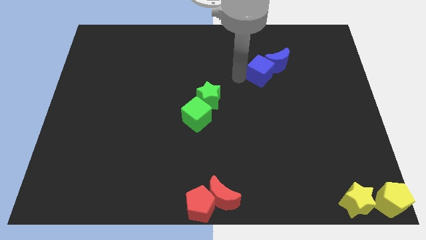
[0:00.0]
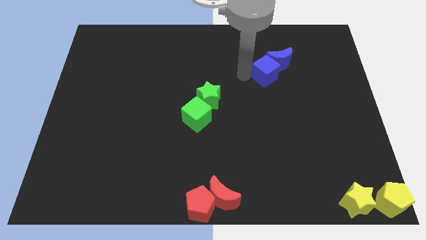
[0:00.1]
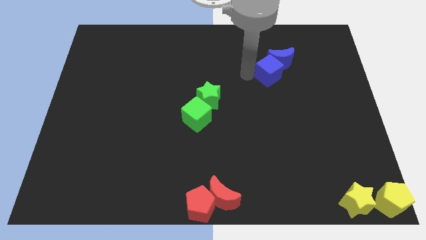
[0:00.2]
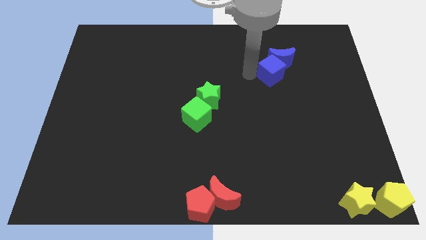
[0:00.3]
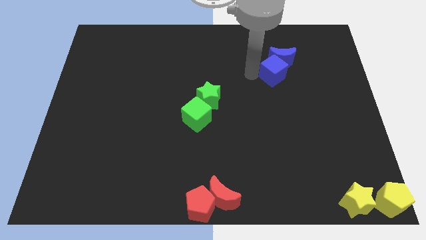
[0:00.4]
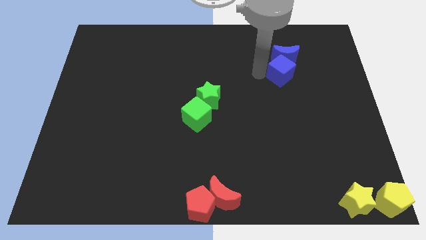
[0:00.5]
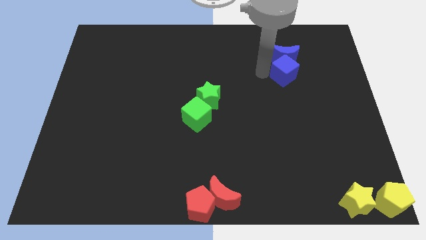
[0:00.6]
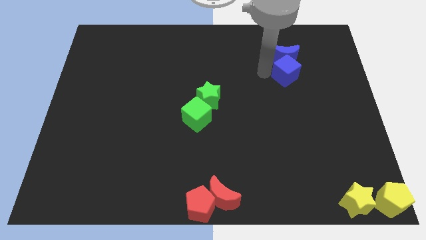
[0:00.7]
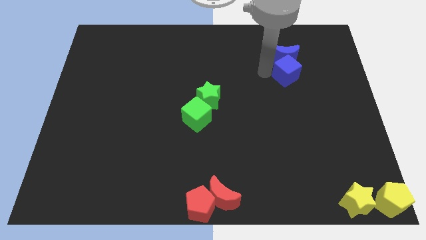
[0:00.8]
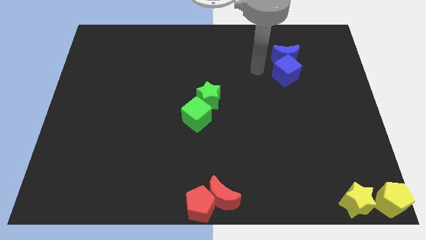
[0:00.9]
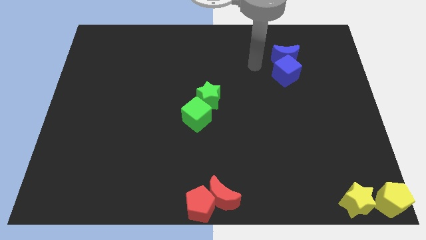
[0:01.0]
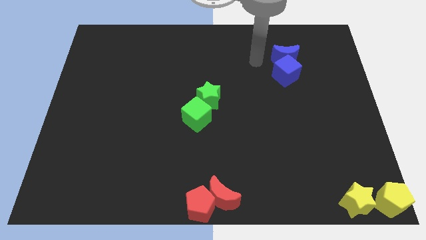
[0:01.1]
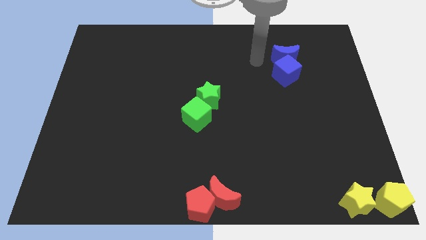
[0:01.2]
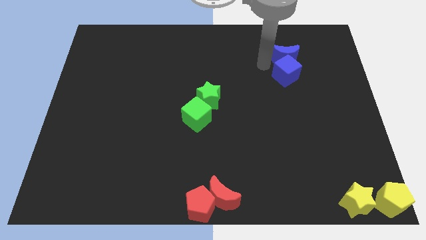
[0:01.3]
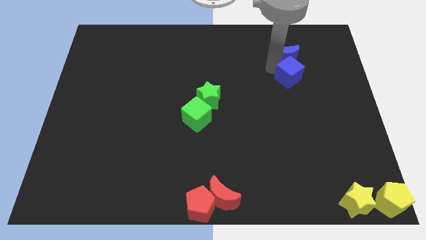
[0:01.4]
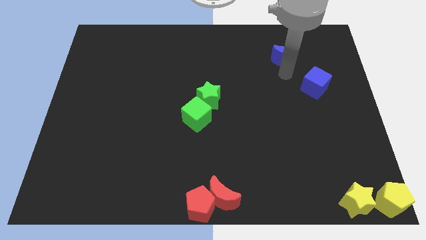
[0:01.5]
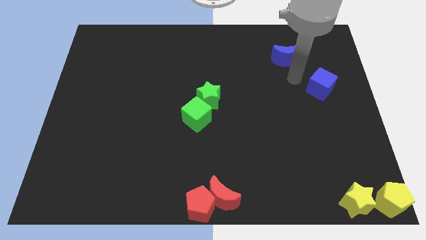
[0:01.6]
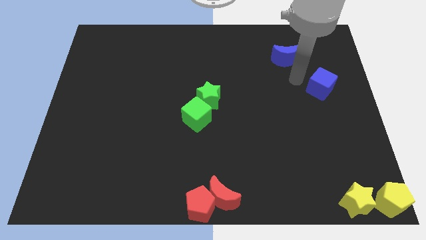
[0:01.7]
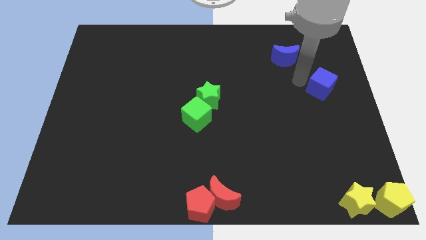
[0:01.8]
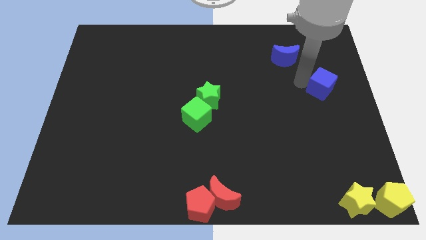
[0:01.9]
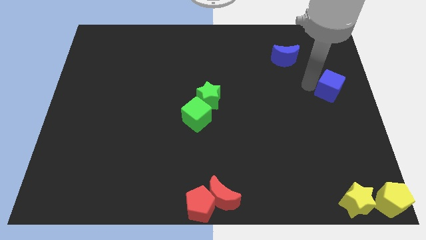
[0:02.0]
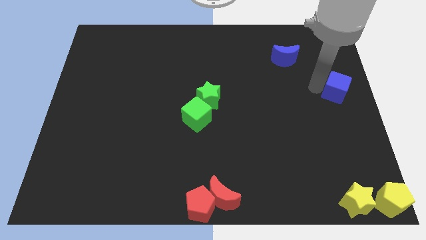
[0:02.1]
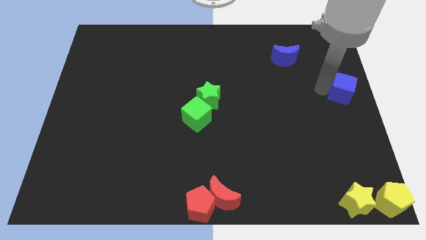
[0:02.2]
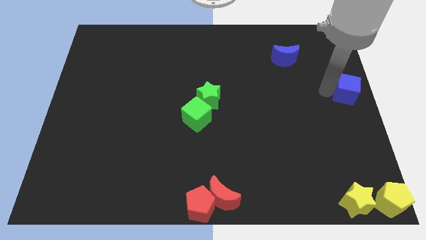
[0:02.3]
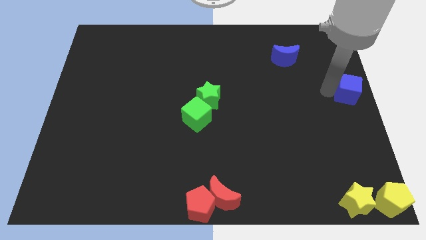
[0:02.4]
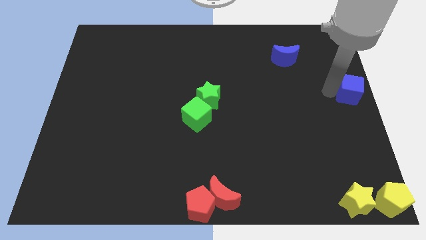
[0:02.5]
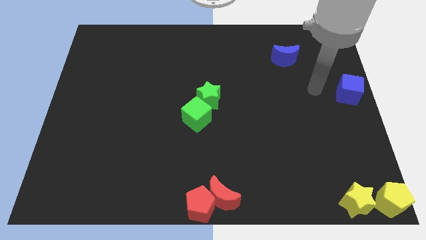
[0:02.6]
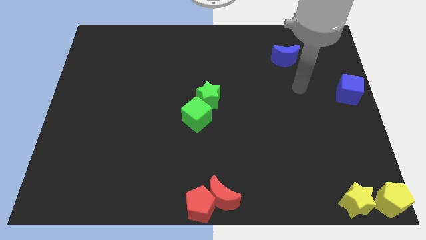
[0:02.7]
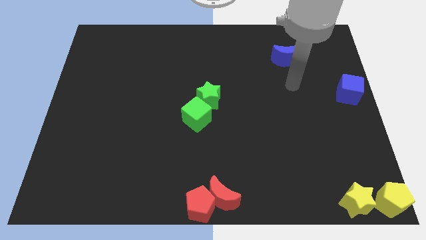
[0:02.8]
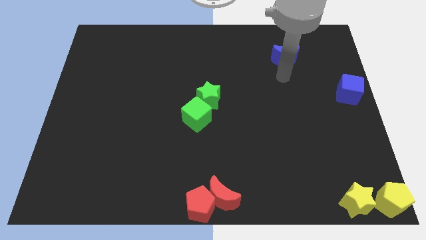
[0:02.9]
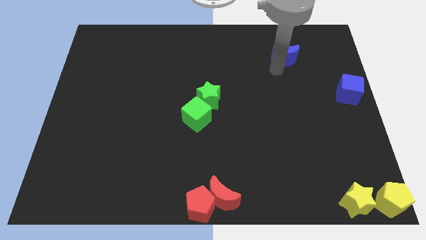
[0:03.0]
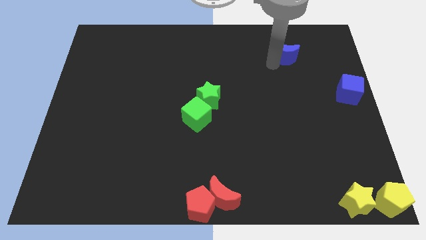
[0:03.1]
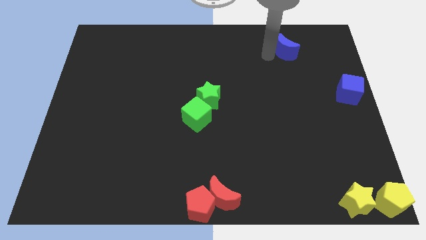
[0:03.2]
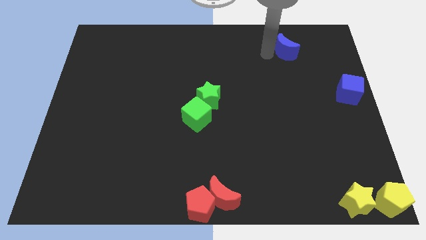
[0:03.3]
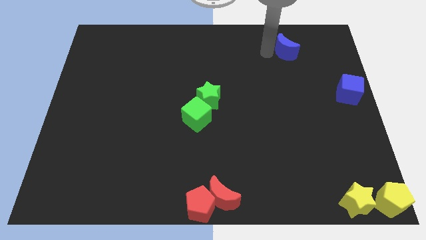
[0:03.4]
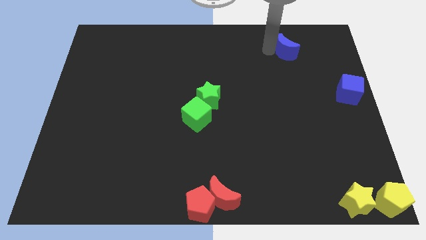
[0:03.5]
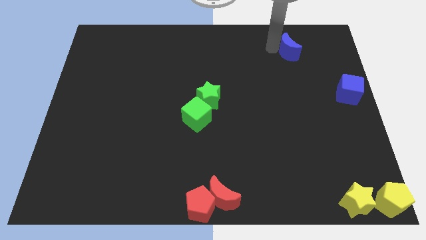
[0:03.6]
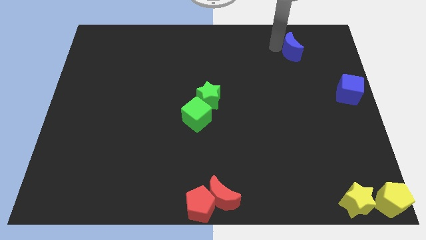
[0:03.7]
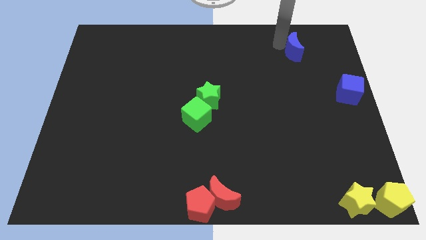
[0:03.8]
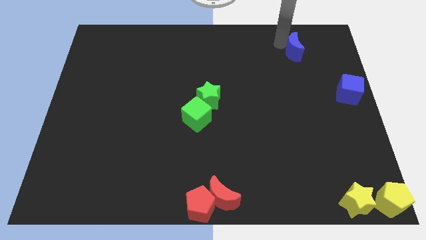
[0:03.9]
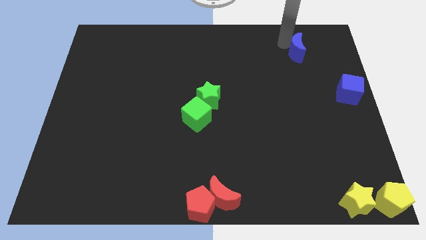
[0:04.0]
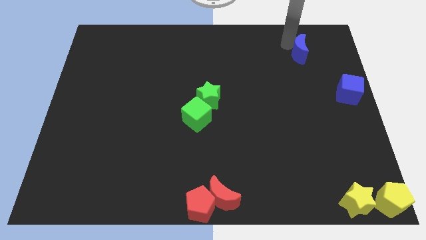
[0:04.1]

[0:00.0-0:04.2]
separate the blue cube from the blue moon

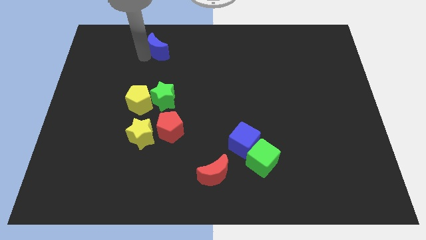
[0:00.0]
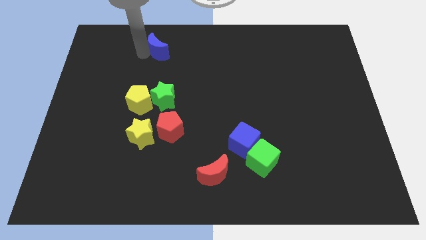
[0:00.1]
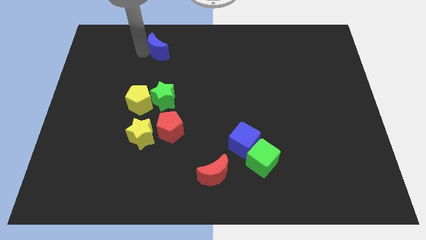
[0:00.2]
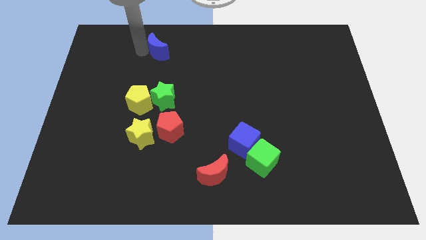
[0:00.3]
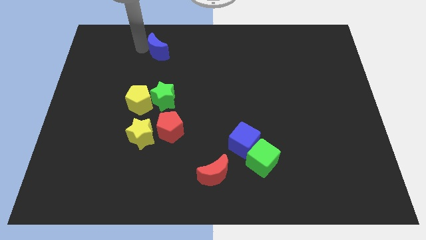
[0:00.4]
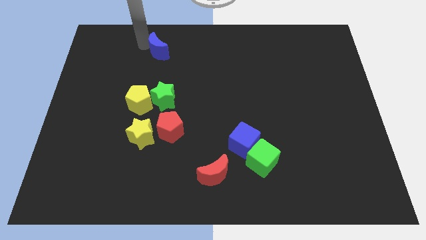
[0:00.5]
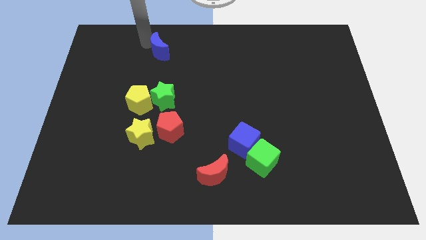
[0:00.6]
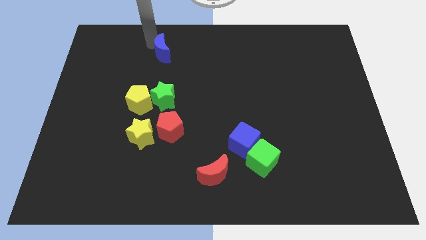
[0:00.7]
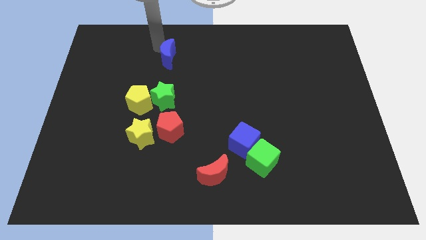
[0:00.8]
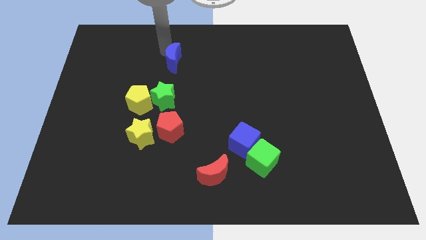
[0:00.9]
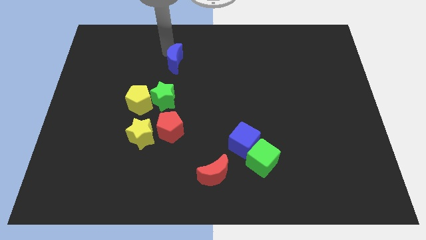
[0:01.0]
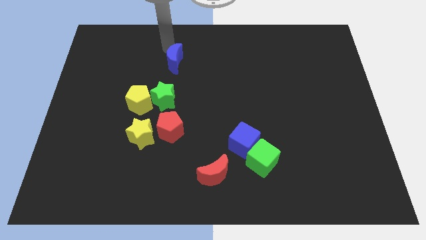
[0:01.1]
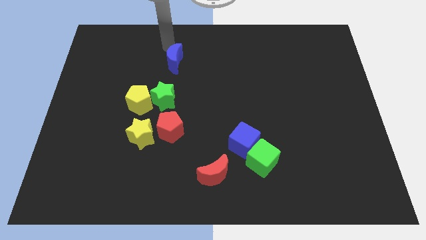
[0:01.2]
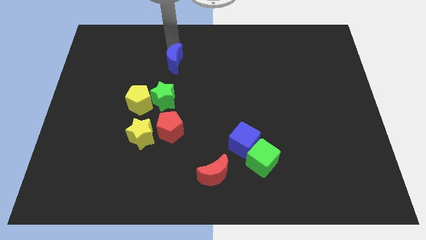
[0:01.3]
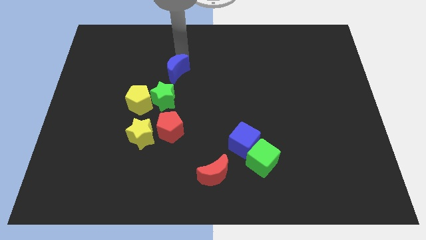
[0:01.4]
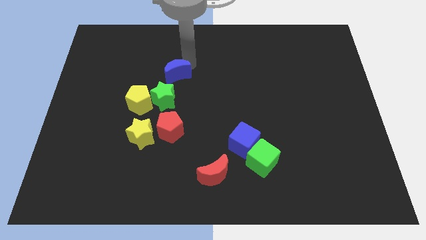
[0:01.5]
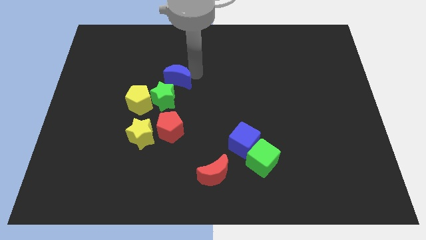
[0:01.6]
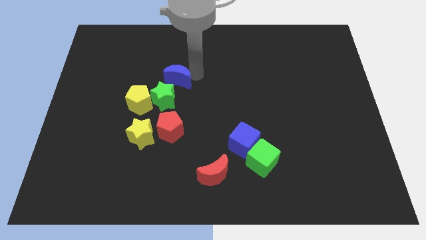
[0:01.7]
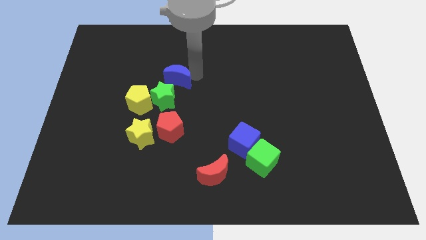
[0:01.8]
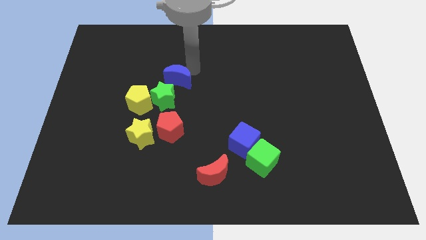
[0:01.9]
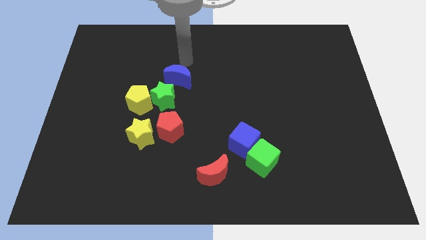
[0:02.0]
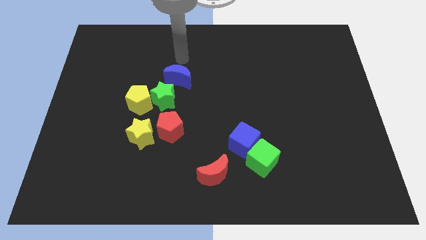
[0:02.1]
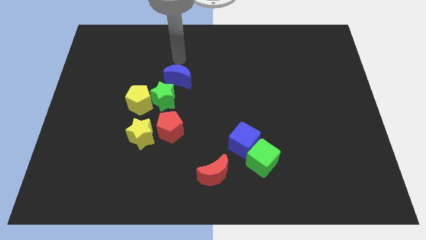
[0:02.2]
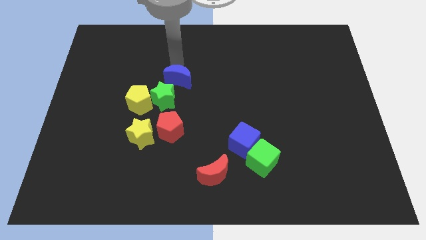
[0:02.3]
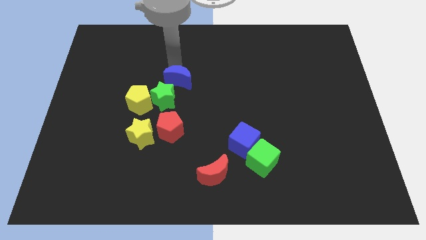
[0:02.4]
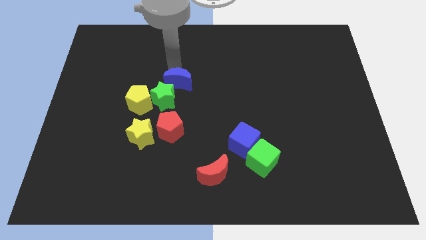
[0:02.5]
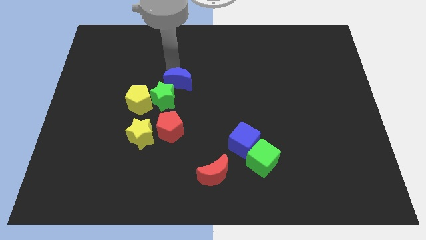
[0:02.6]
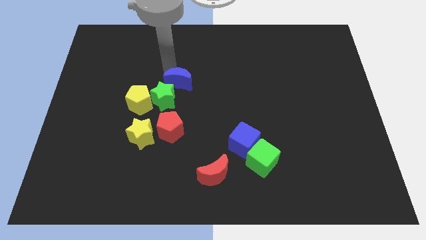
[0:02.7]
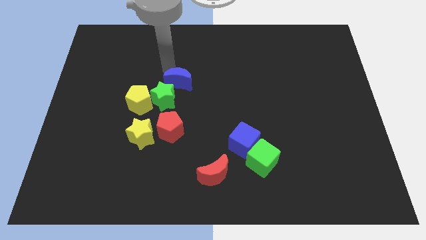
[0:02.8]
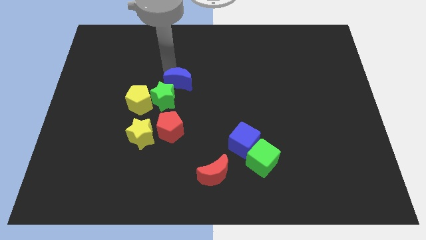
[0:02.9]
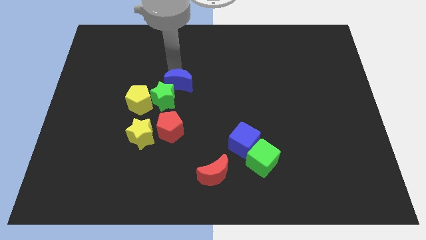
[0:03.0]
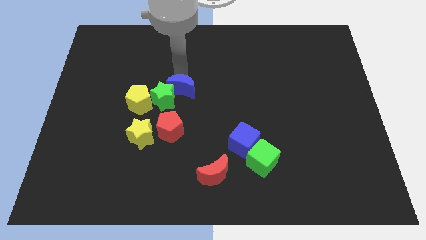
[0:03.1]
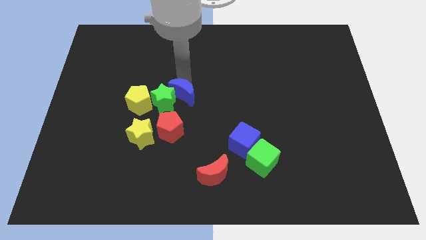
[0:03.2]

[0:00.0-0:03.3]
move the blue moon into the green star on top

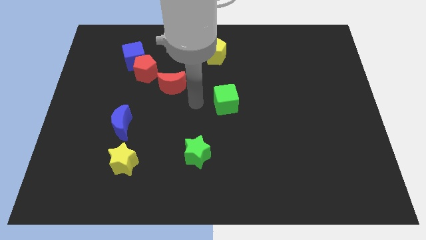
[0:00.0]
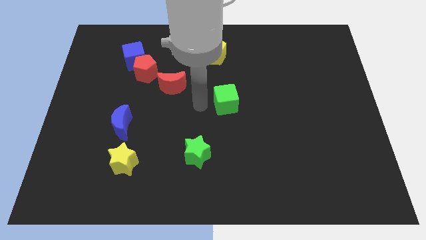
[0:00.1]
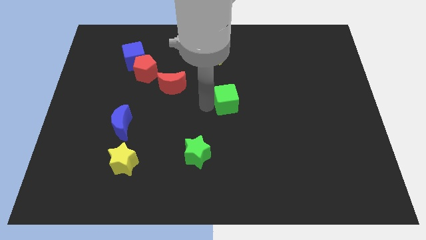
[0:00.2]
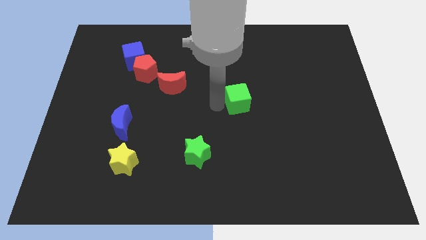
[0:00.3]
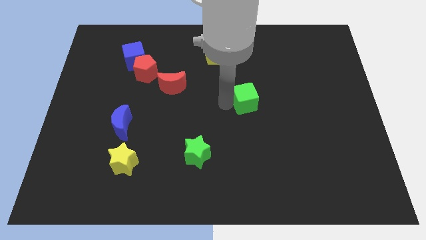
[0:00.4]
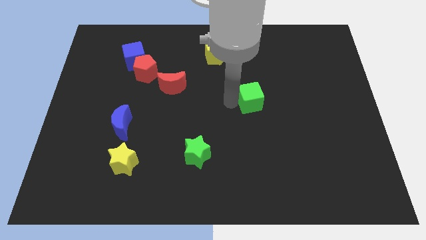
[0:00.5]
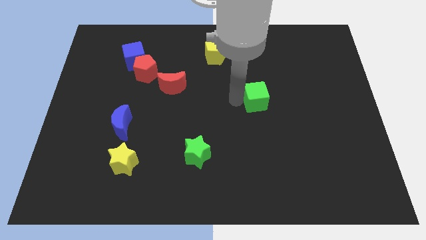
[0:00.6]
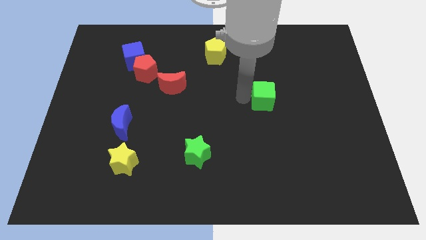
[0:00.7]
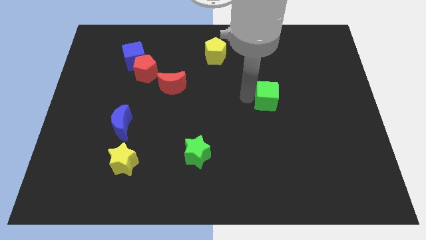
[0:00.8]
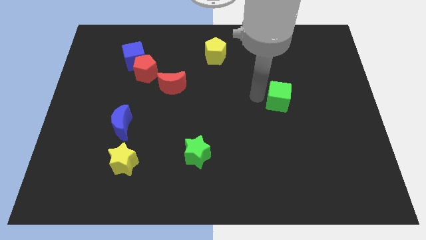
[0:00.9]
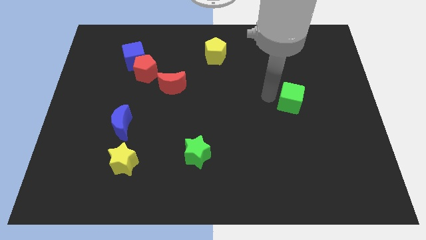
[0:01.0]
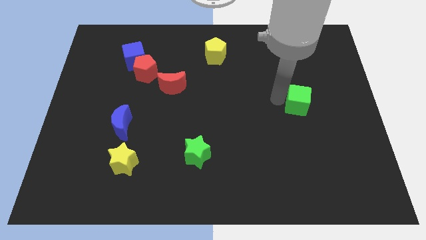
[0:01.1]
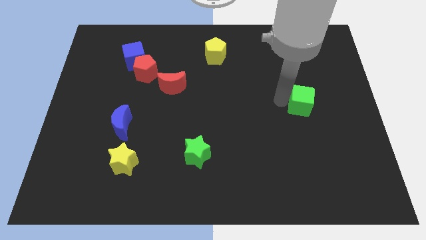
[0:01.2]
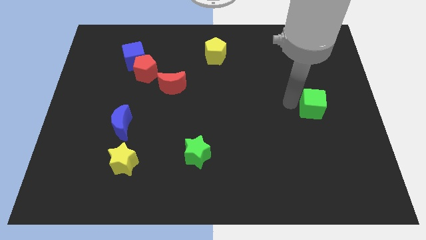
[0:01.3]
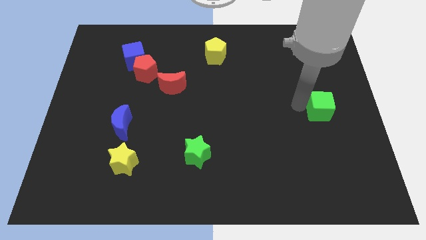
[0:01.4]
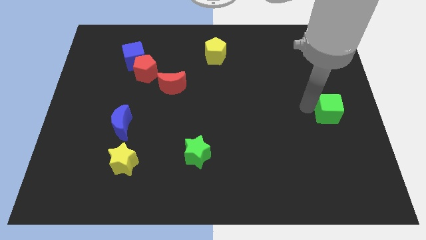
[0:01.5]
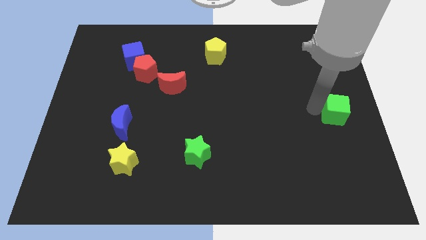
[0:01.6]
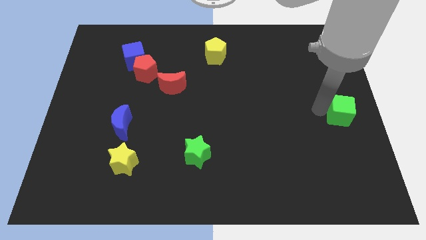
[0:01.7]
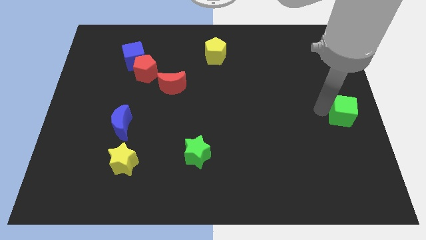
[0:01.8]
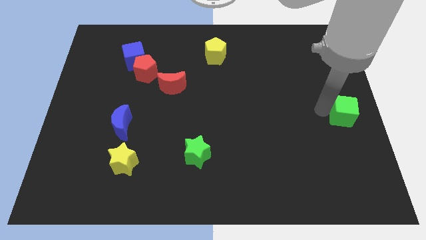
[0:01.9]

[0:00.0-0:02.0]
move the green cube to the center right side
